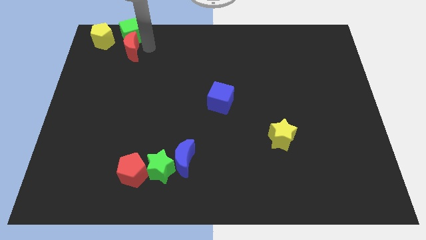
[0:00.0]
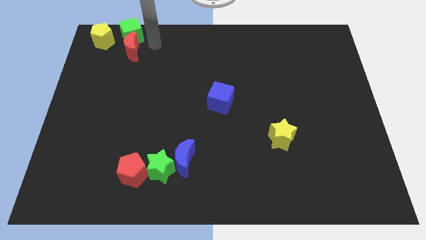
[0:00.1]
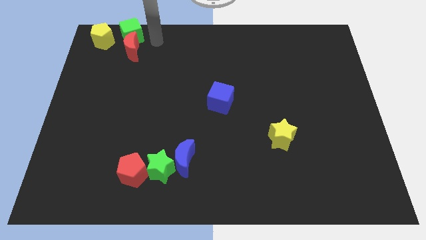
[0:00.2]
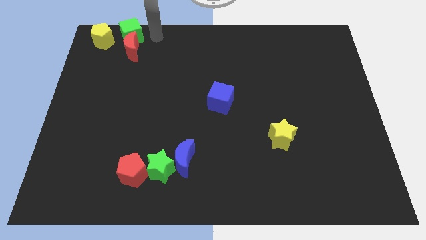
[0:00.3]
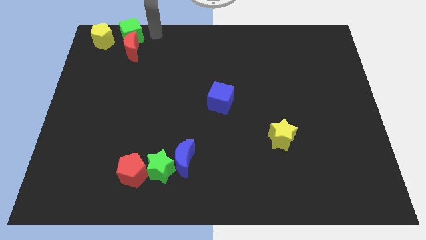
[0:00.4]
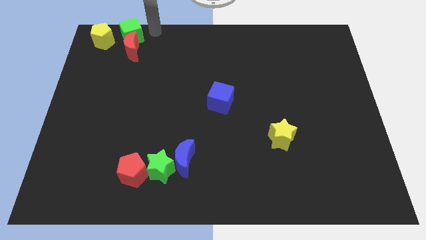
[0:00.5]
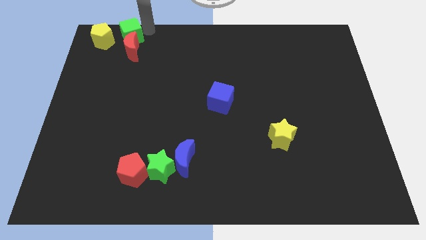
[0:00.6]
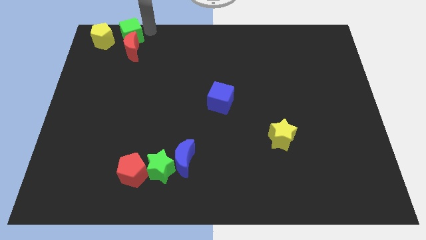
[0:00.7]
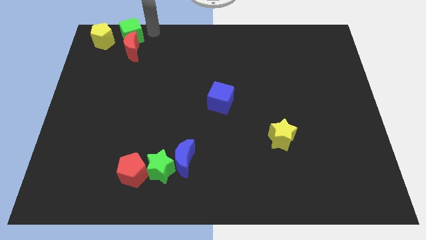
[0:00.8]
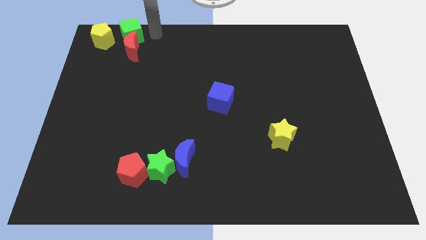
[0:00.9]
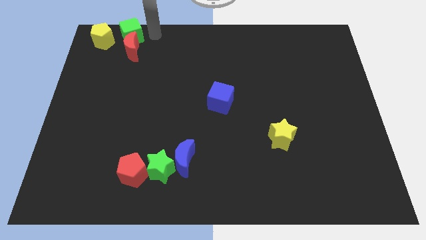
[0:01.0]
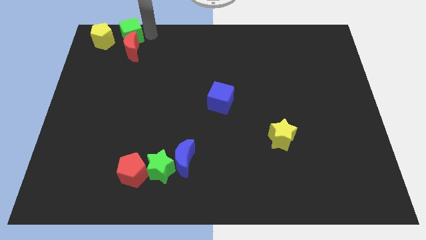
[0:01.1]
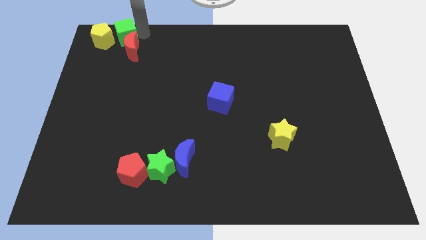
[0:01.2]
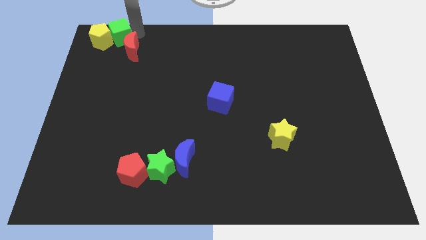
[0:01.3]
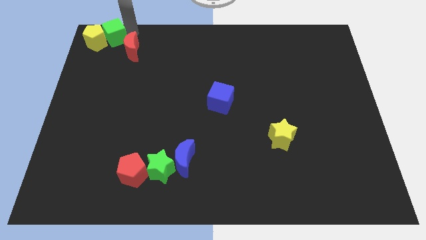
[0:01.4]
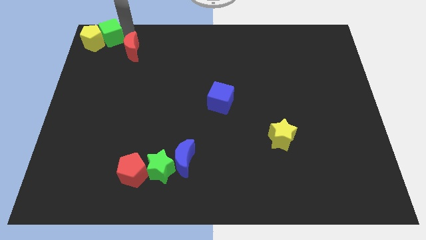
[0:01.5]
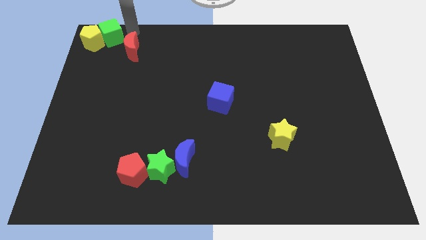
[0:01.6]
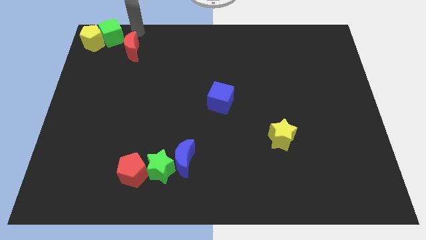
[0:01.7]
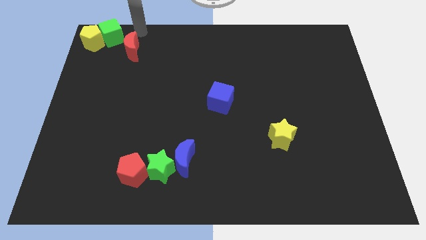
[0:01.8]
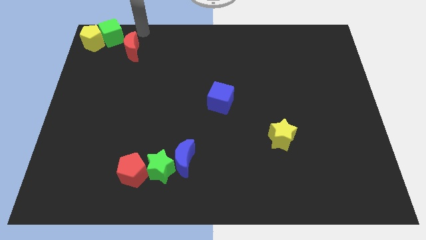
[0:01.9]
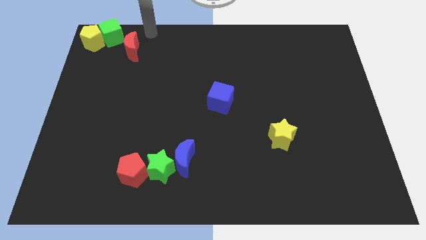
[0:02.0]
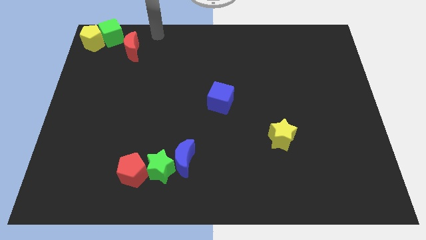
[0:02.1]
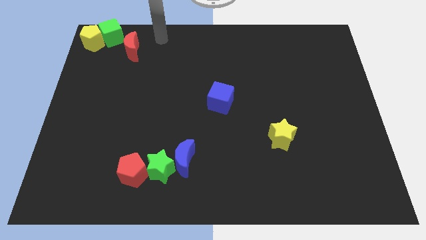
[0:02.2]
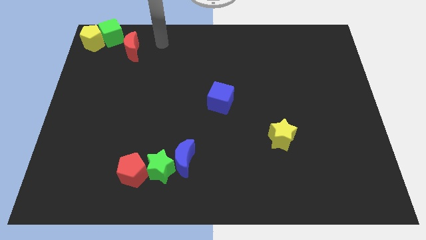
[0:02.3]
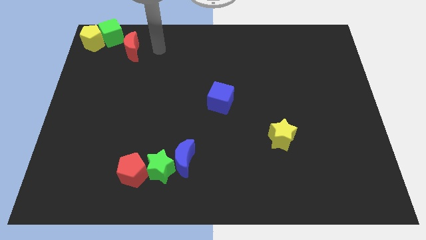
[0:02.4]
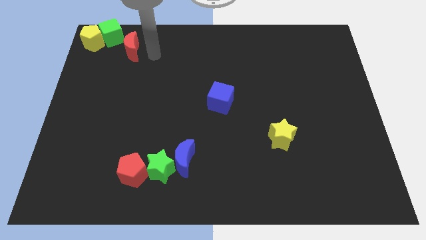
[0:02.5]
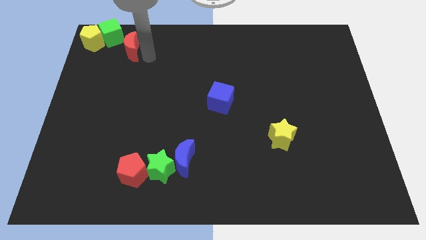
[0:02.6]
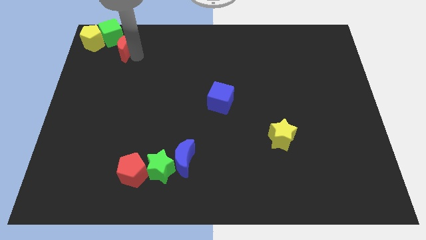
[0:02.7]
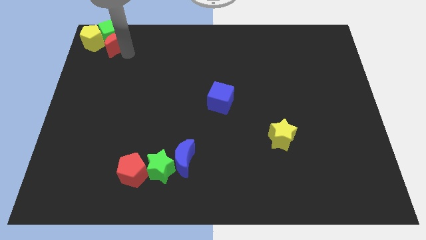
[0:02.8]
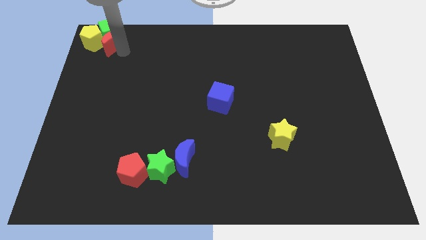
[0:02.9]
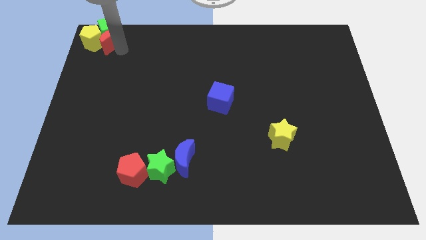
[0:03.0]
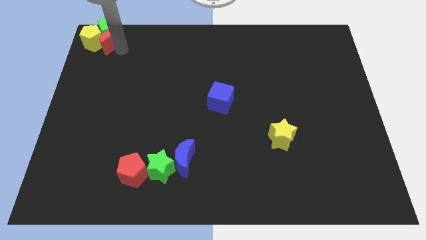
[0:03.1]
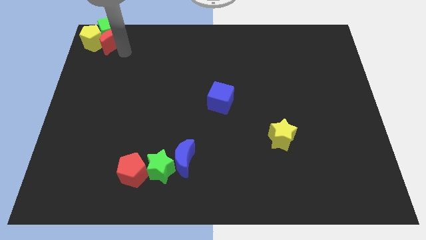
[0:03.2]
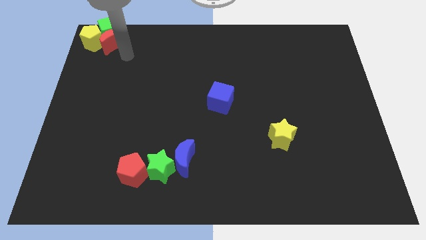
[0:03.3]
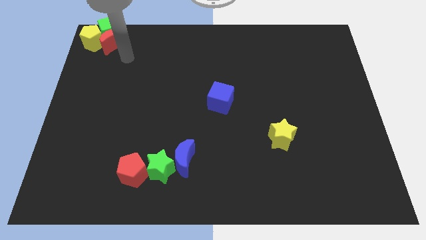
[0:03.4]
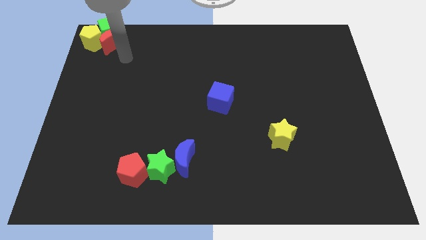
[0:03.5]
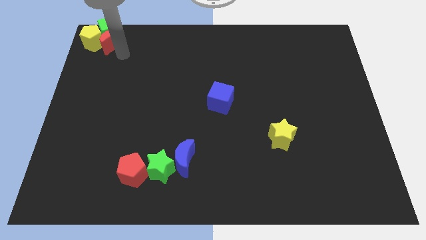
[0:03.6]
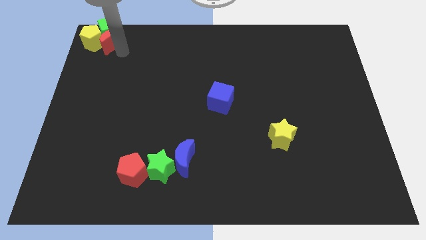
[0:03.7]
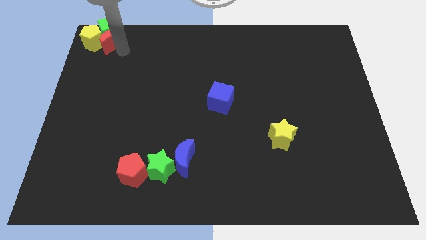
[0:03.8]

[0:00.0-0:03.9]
push the green cube into yellow pentagon

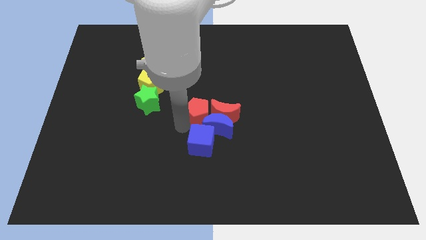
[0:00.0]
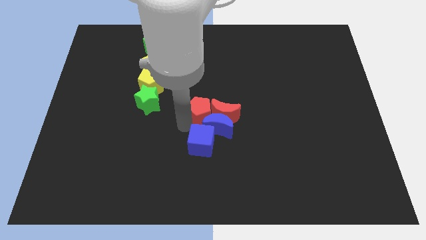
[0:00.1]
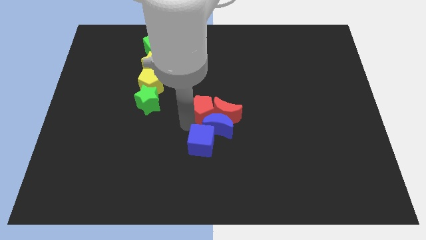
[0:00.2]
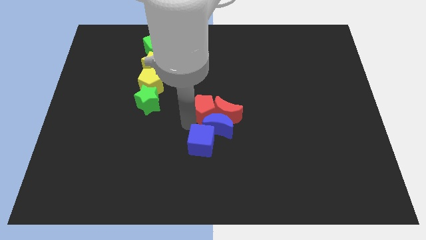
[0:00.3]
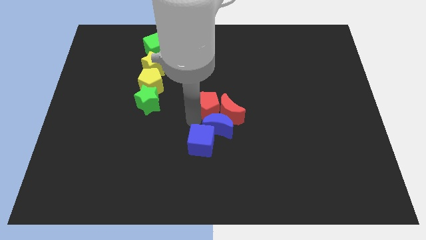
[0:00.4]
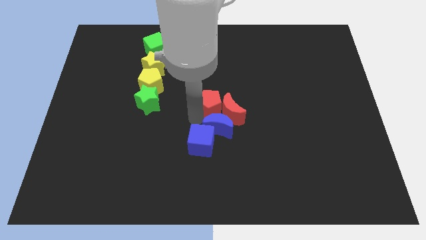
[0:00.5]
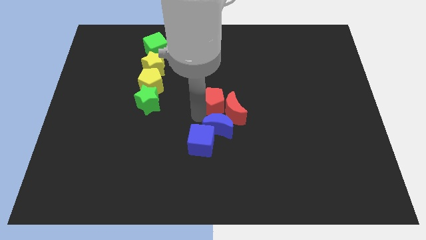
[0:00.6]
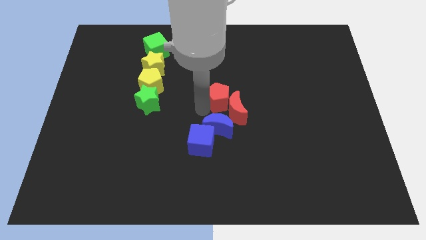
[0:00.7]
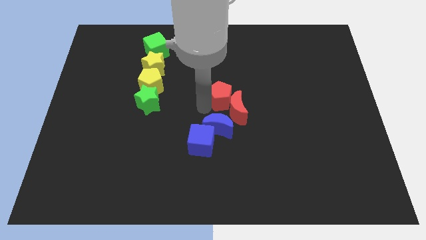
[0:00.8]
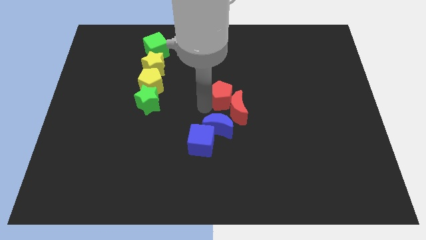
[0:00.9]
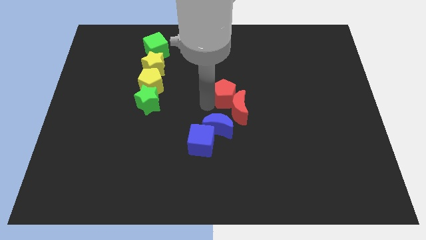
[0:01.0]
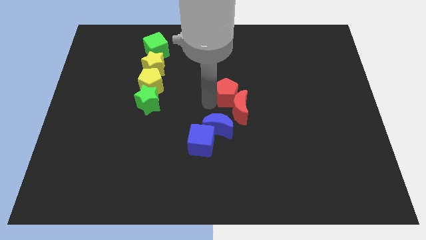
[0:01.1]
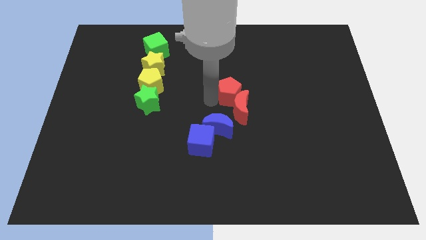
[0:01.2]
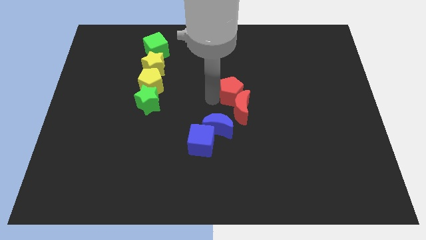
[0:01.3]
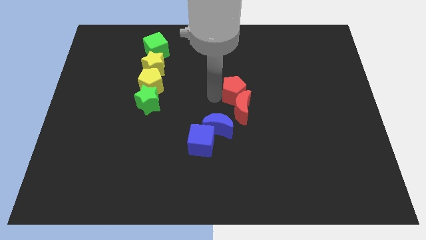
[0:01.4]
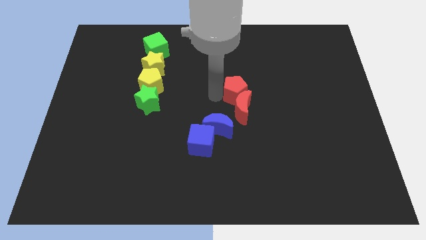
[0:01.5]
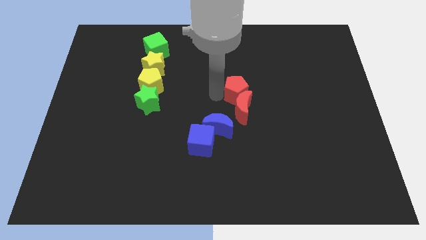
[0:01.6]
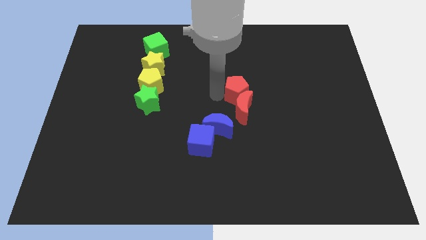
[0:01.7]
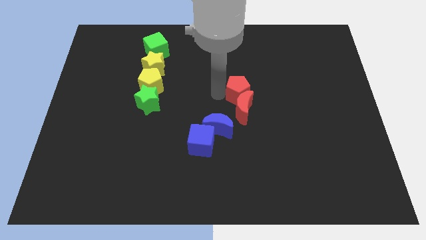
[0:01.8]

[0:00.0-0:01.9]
place the red pentagon above the red crescent

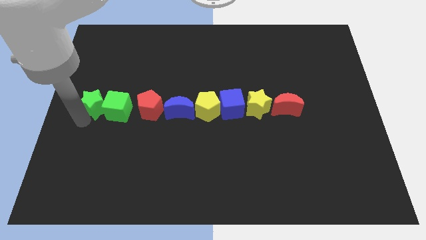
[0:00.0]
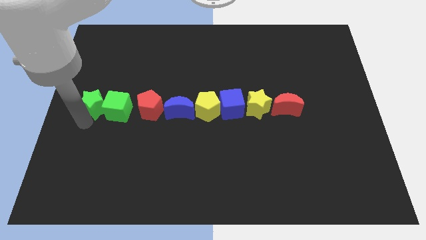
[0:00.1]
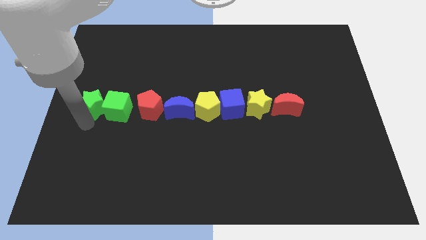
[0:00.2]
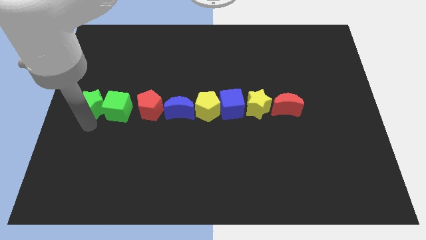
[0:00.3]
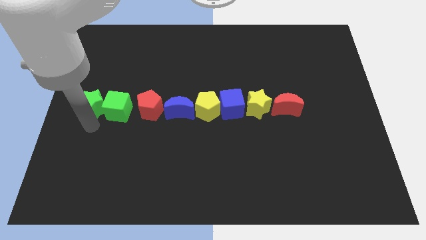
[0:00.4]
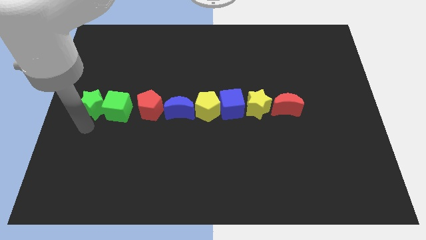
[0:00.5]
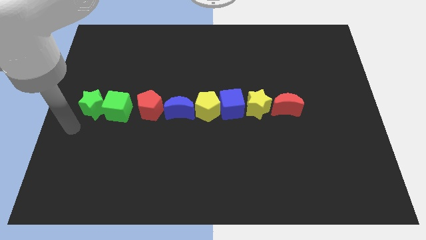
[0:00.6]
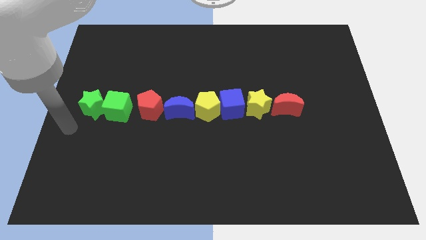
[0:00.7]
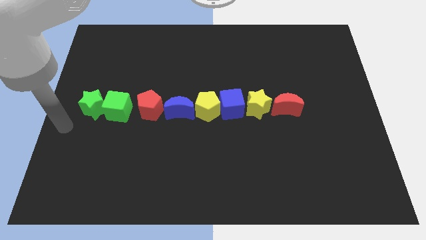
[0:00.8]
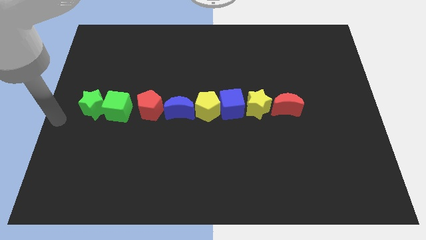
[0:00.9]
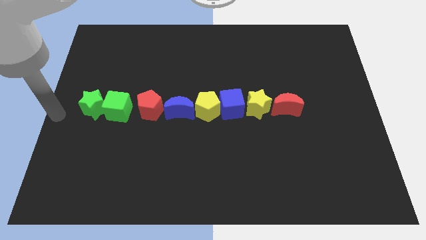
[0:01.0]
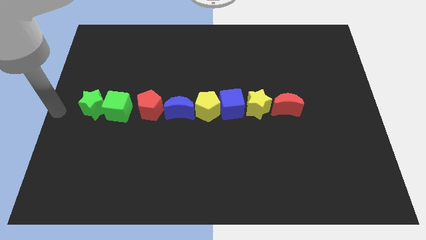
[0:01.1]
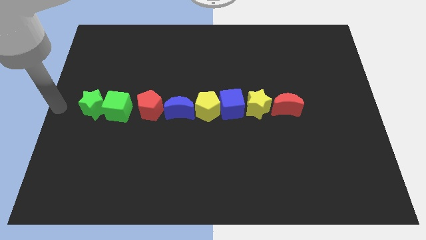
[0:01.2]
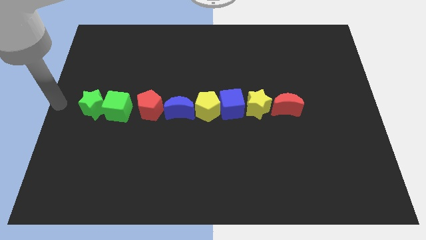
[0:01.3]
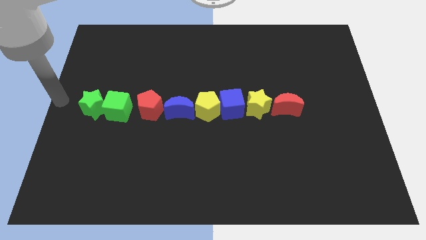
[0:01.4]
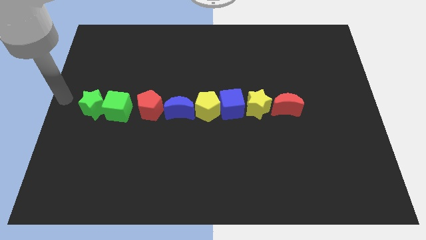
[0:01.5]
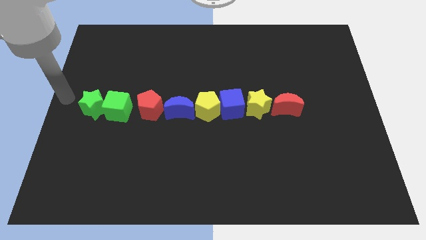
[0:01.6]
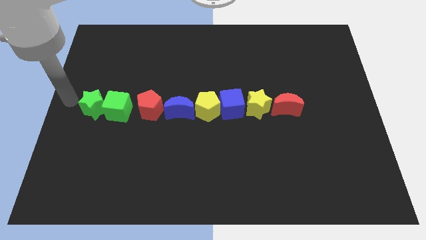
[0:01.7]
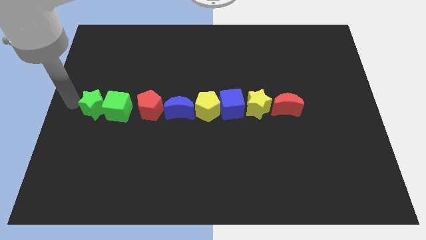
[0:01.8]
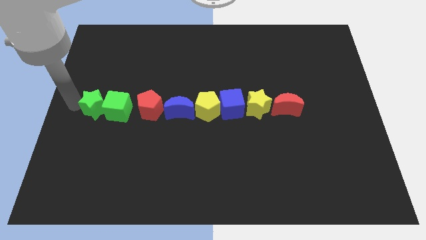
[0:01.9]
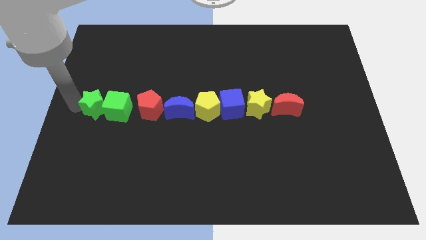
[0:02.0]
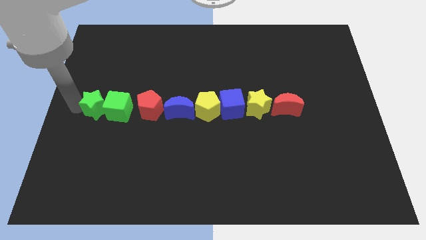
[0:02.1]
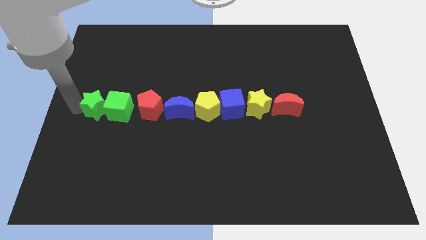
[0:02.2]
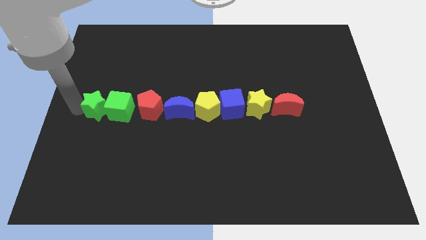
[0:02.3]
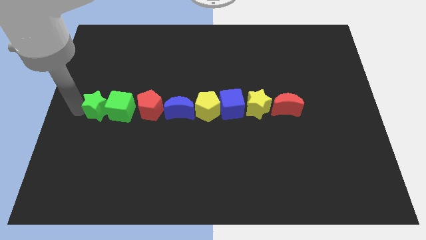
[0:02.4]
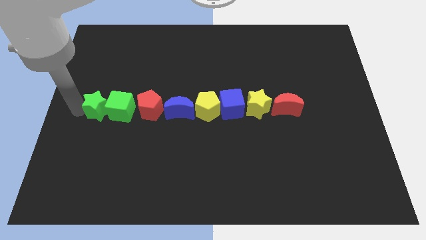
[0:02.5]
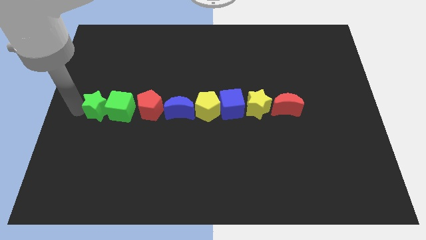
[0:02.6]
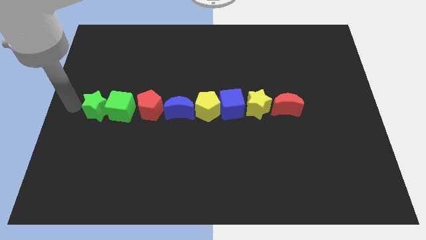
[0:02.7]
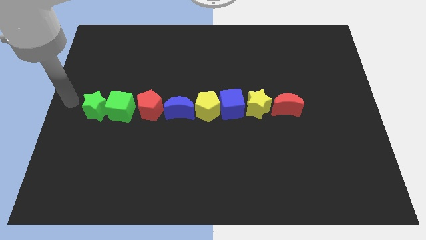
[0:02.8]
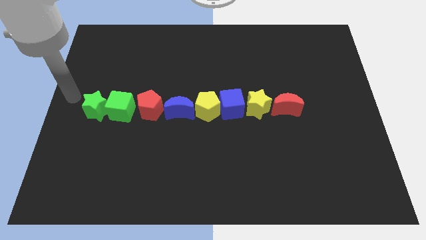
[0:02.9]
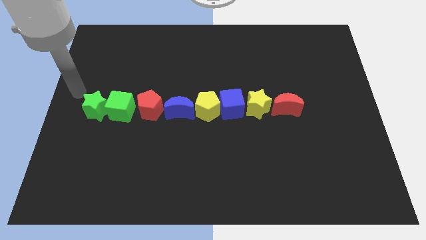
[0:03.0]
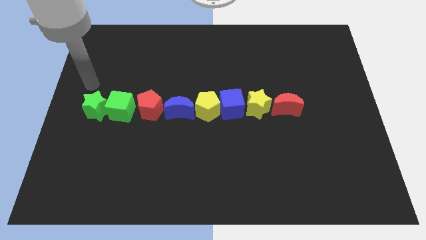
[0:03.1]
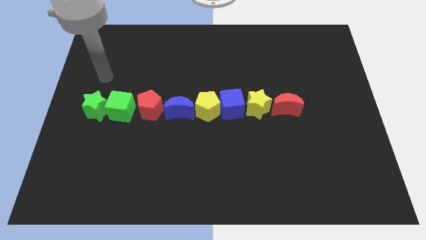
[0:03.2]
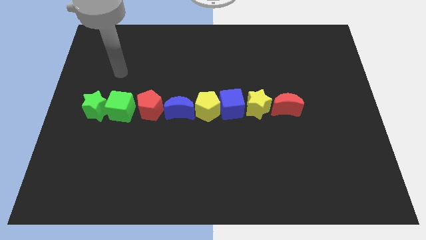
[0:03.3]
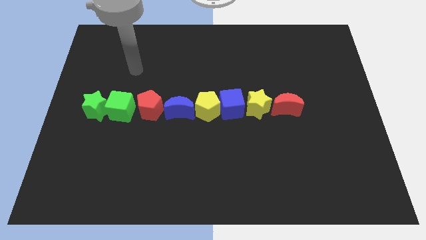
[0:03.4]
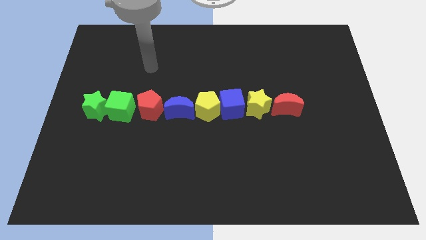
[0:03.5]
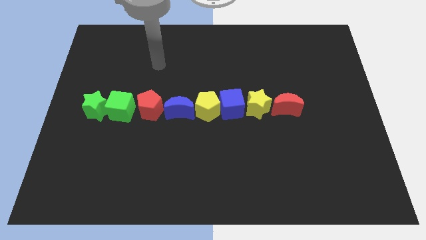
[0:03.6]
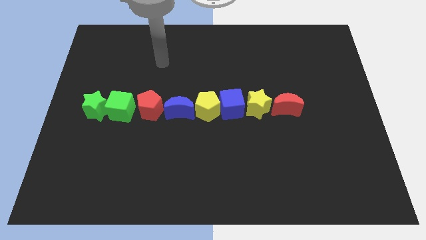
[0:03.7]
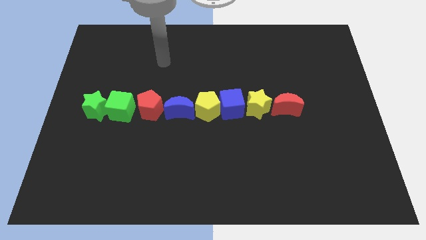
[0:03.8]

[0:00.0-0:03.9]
move your arm away from the green star
